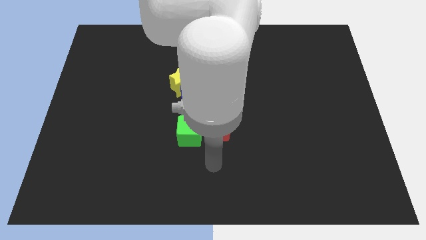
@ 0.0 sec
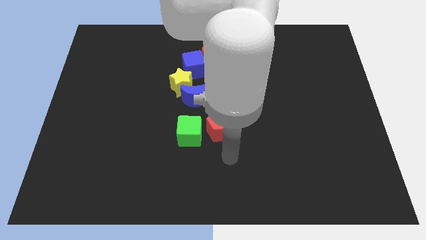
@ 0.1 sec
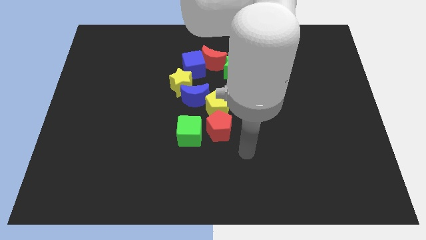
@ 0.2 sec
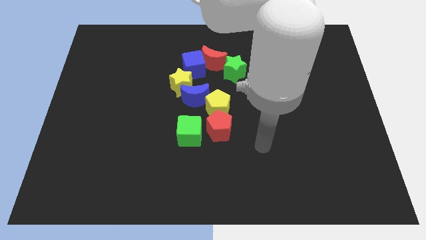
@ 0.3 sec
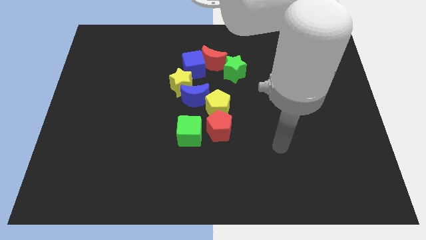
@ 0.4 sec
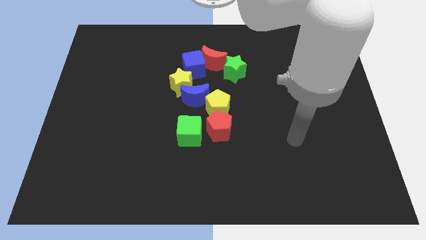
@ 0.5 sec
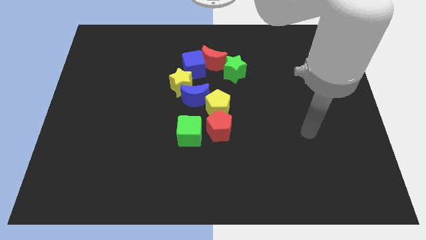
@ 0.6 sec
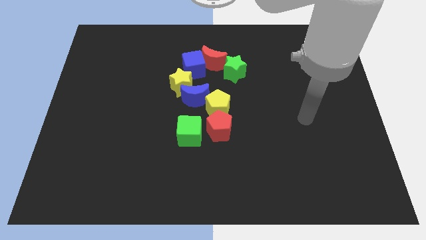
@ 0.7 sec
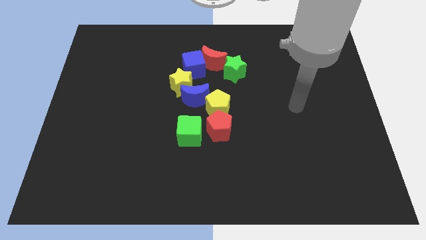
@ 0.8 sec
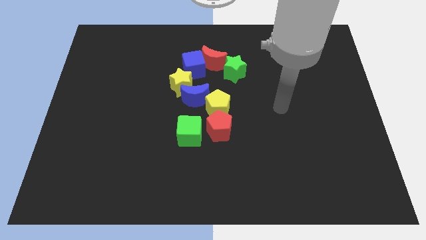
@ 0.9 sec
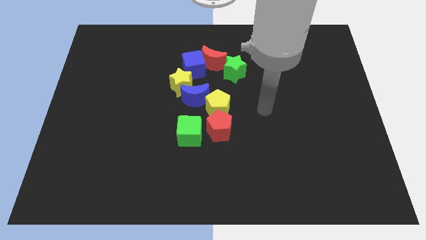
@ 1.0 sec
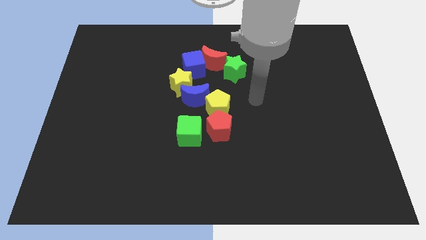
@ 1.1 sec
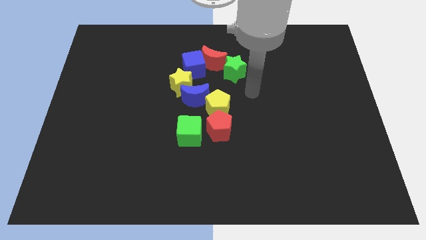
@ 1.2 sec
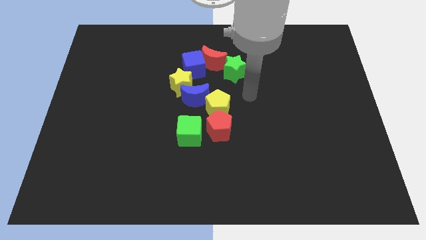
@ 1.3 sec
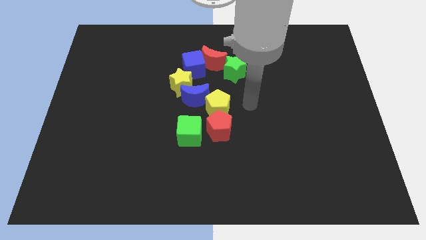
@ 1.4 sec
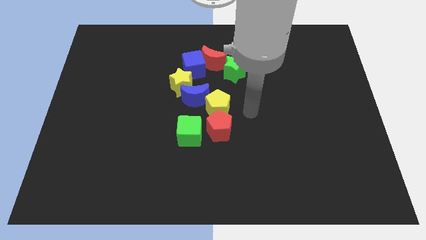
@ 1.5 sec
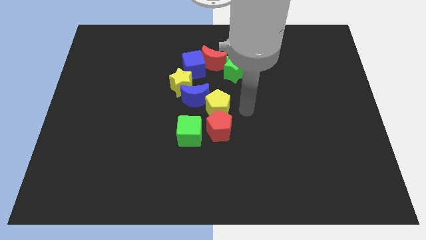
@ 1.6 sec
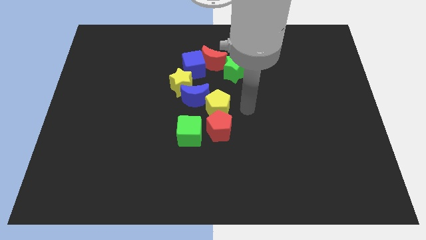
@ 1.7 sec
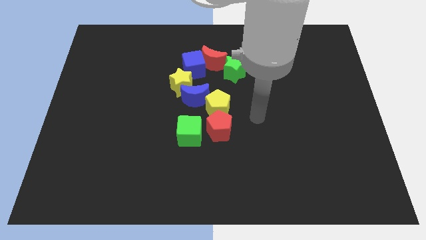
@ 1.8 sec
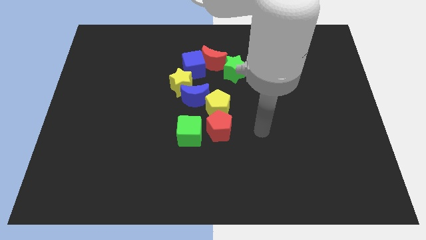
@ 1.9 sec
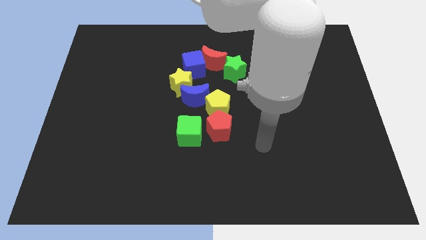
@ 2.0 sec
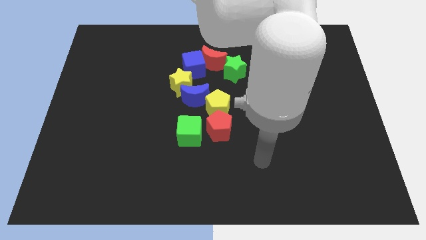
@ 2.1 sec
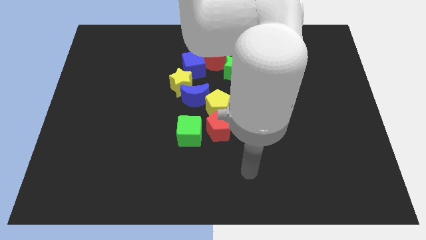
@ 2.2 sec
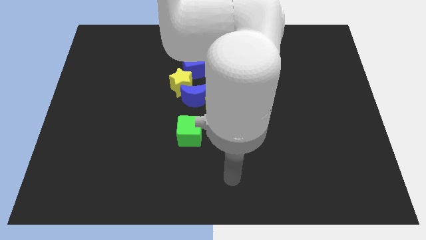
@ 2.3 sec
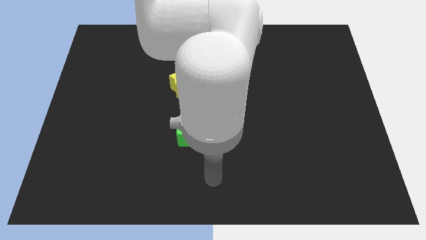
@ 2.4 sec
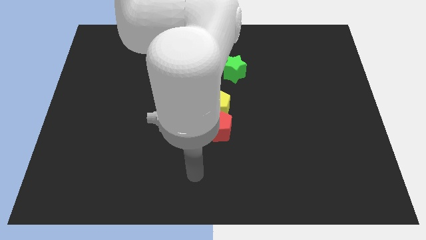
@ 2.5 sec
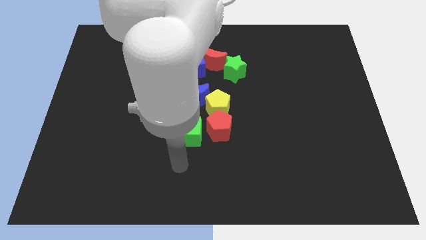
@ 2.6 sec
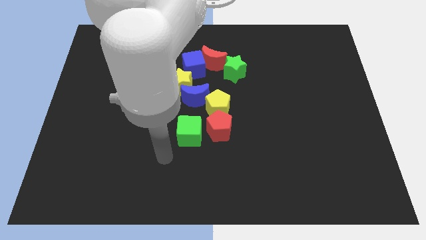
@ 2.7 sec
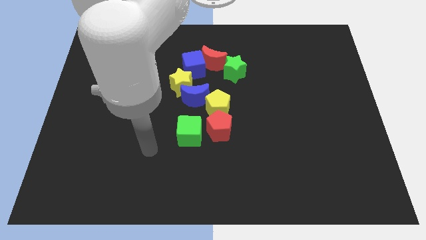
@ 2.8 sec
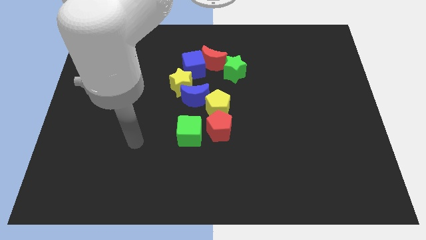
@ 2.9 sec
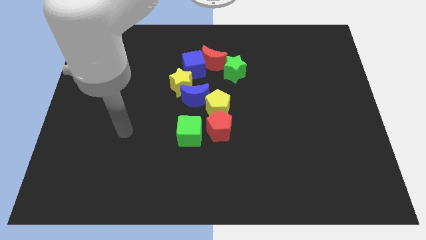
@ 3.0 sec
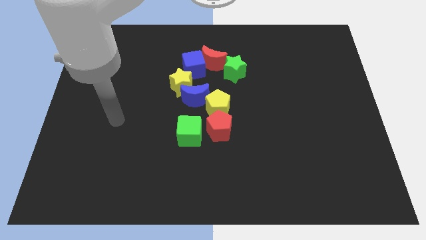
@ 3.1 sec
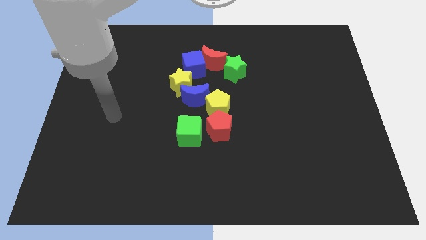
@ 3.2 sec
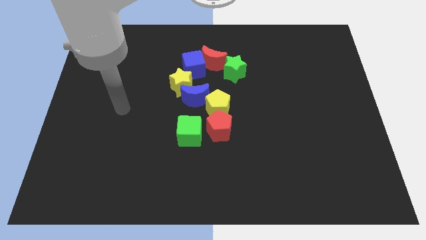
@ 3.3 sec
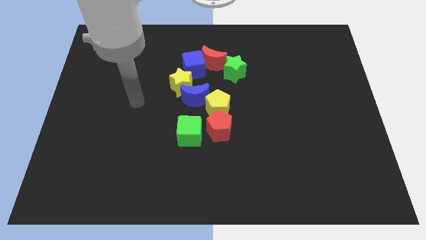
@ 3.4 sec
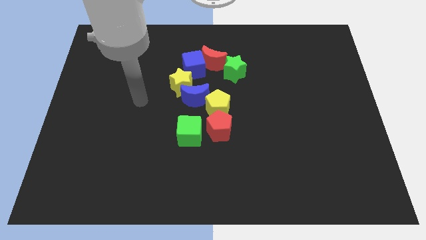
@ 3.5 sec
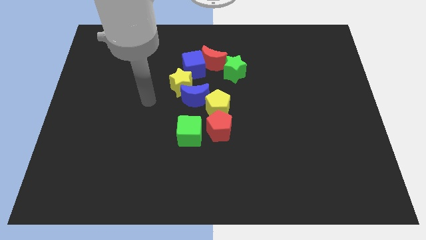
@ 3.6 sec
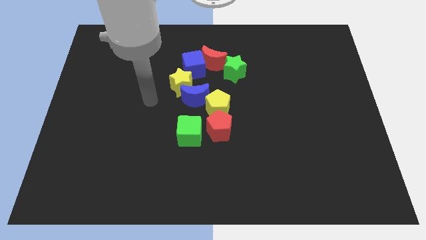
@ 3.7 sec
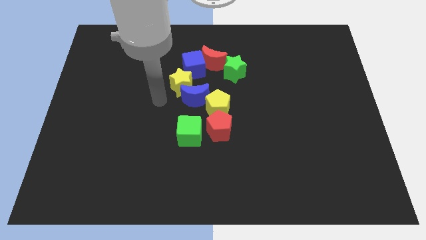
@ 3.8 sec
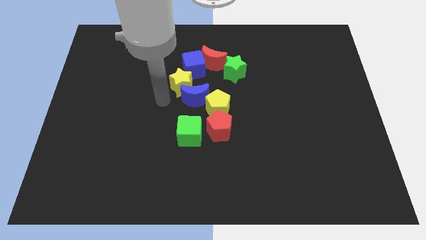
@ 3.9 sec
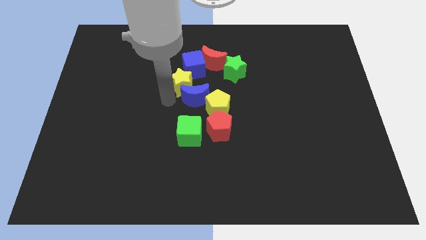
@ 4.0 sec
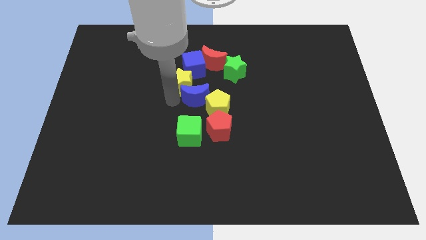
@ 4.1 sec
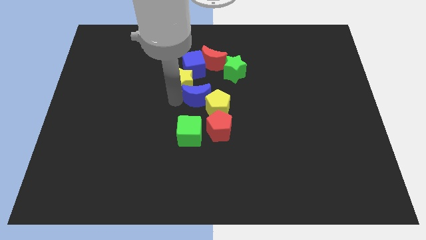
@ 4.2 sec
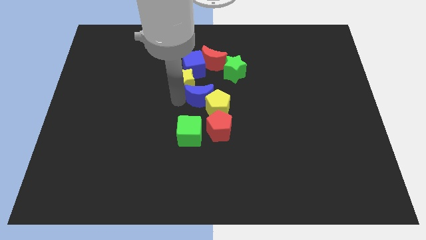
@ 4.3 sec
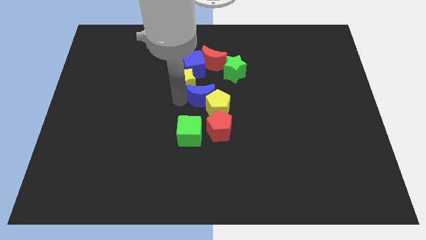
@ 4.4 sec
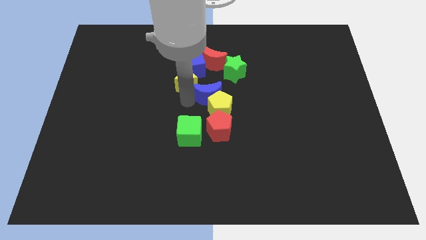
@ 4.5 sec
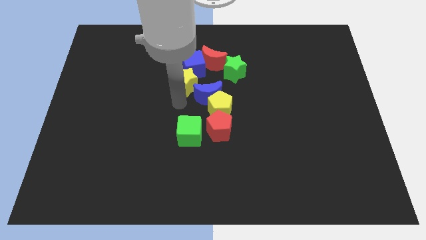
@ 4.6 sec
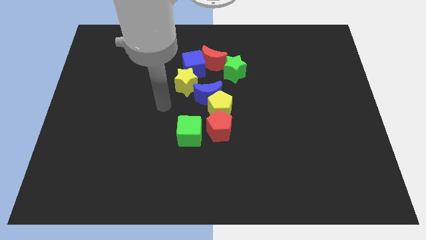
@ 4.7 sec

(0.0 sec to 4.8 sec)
move the blue crescent into the yellow pentagon

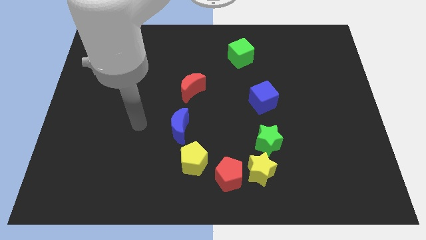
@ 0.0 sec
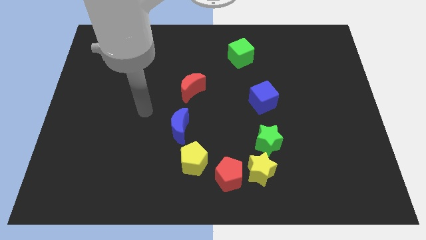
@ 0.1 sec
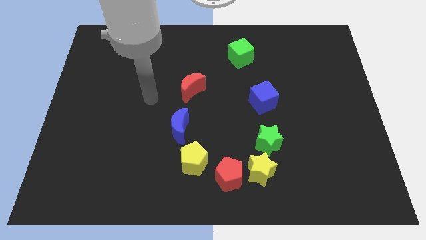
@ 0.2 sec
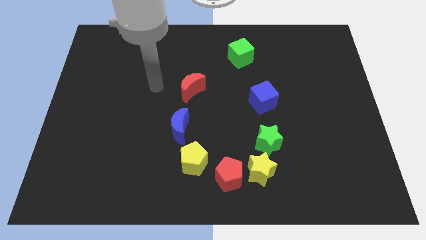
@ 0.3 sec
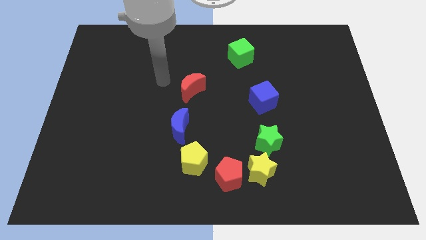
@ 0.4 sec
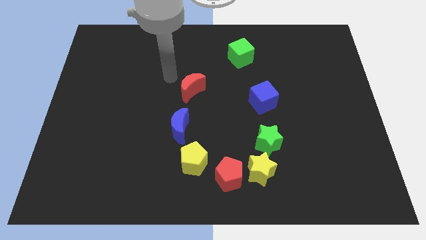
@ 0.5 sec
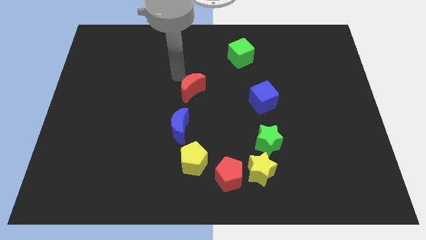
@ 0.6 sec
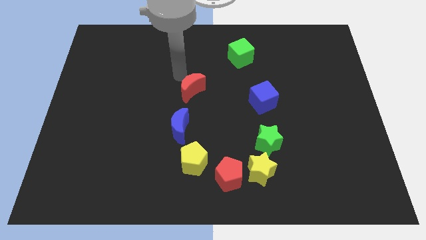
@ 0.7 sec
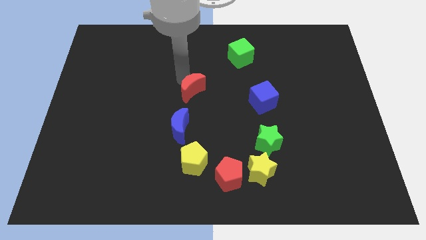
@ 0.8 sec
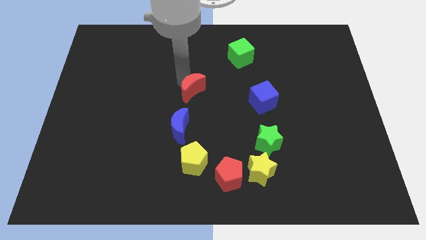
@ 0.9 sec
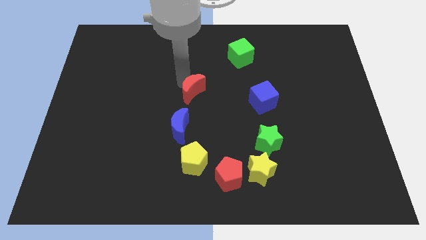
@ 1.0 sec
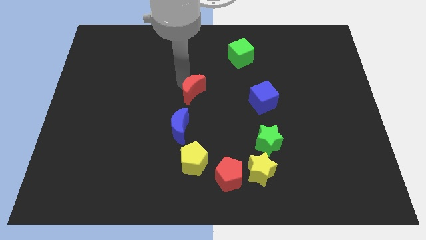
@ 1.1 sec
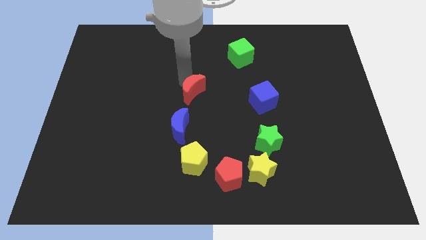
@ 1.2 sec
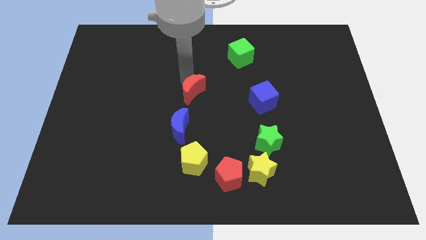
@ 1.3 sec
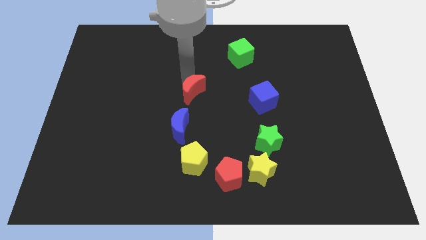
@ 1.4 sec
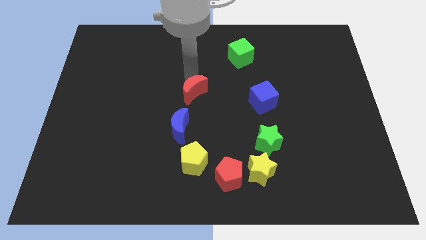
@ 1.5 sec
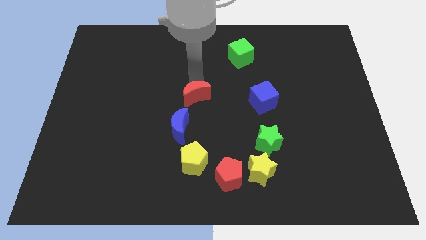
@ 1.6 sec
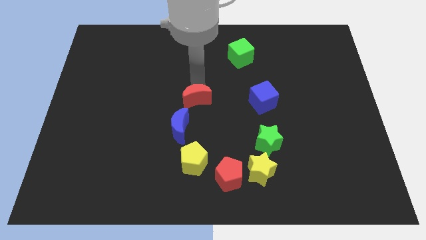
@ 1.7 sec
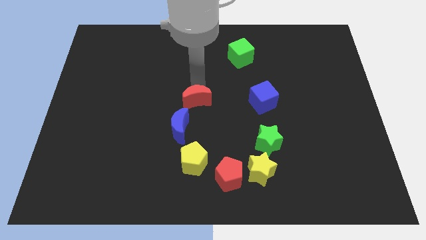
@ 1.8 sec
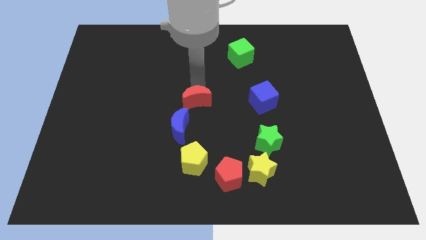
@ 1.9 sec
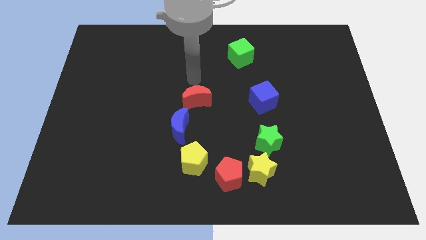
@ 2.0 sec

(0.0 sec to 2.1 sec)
slightly push the red moon to the right

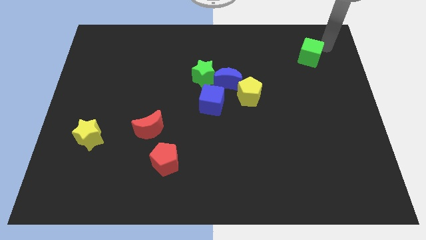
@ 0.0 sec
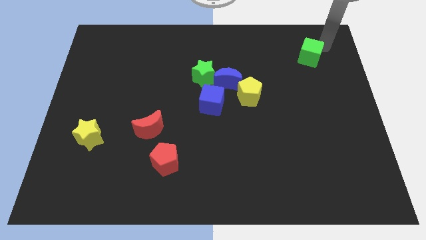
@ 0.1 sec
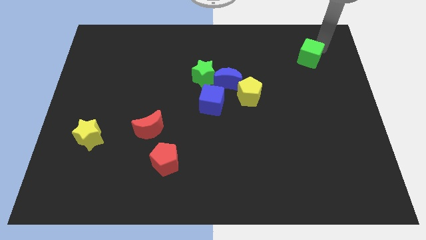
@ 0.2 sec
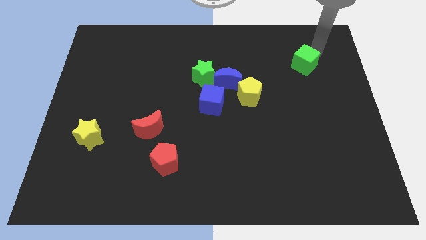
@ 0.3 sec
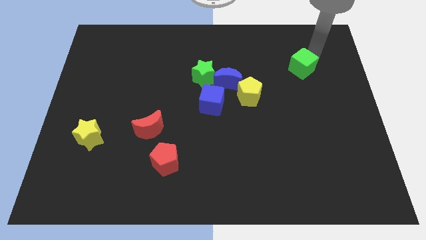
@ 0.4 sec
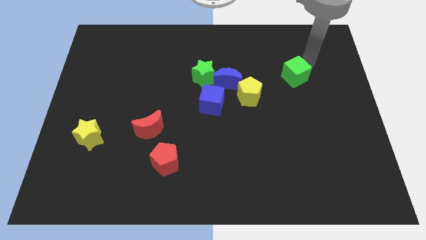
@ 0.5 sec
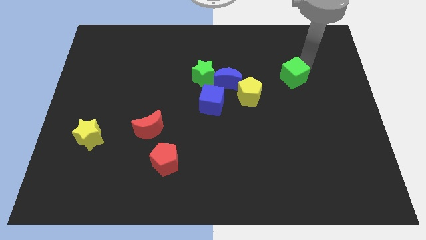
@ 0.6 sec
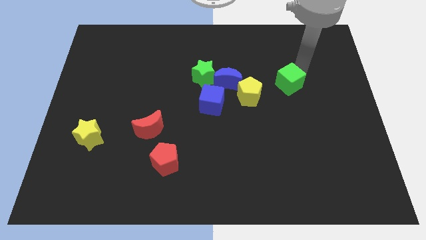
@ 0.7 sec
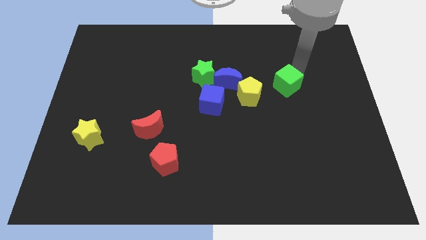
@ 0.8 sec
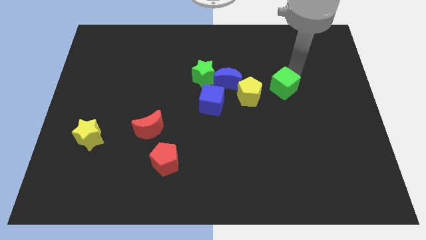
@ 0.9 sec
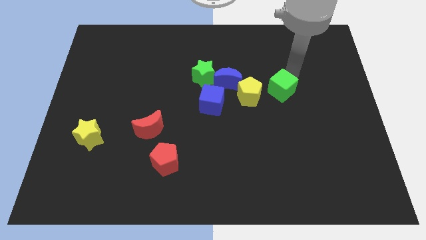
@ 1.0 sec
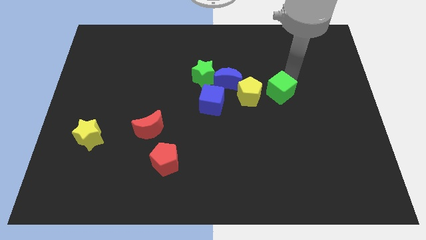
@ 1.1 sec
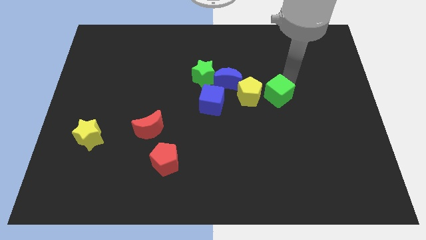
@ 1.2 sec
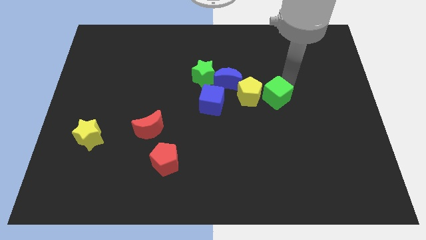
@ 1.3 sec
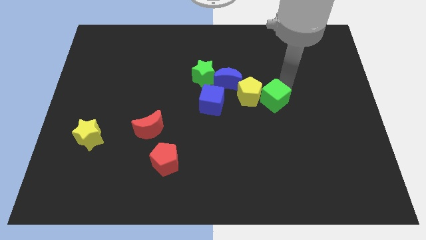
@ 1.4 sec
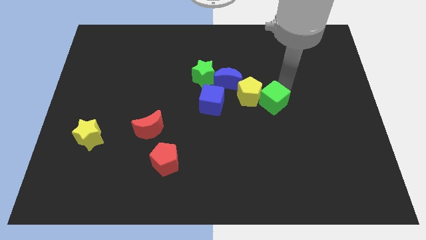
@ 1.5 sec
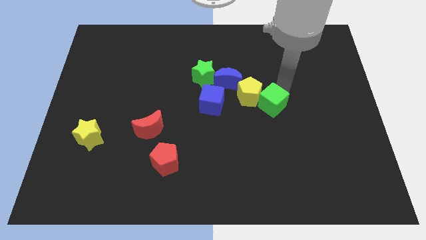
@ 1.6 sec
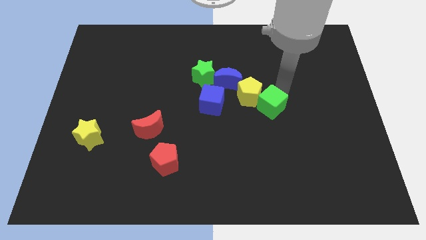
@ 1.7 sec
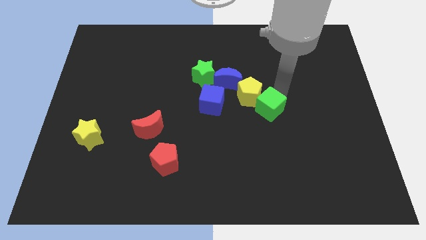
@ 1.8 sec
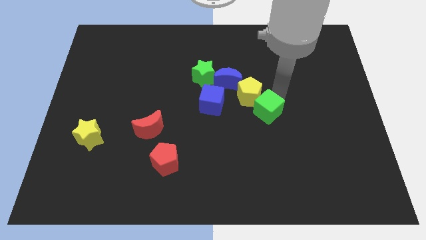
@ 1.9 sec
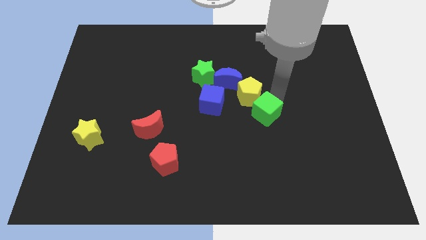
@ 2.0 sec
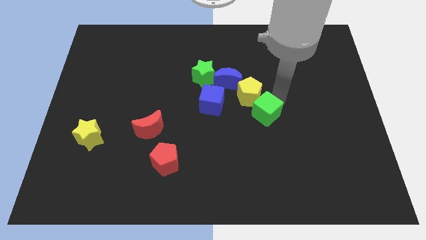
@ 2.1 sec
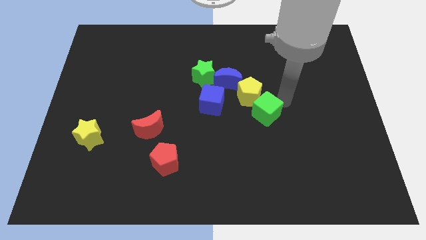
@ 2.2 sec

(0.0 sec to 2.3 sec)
move the green cube at the bottom right of the yellow pentagon
